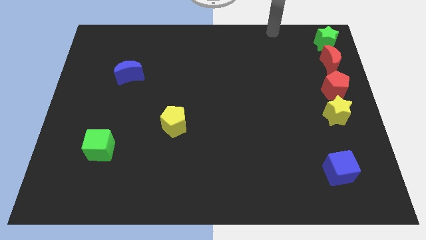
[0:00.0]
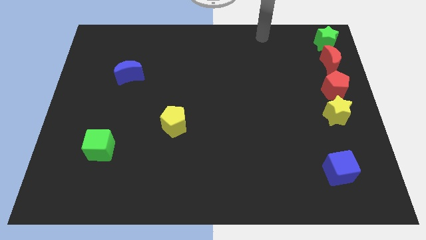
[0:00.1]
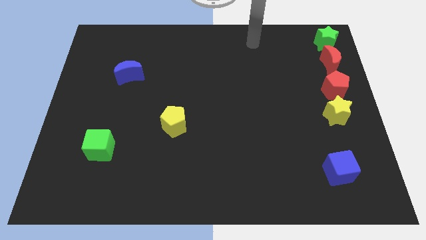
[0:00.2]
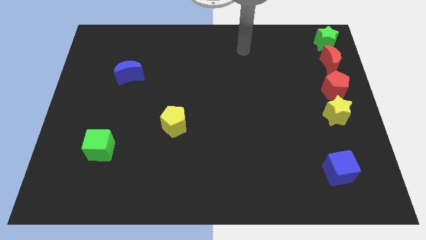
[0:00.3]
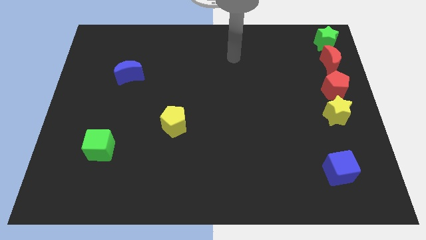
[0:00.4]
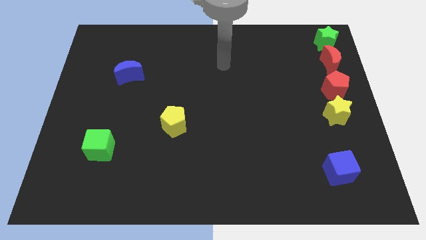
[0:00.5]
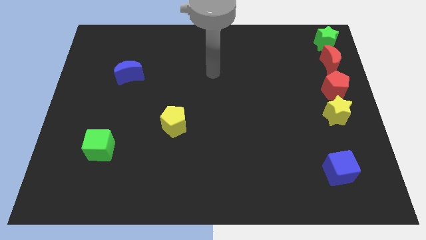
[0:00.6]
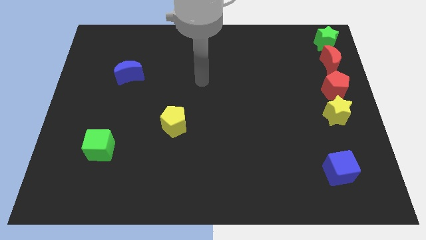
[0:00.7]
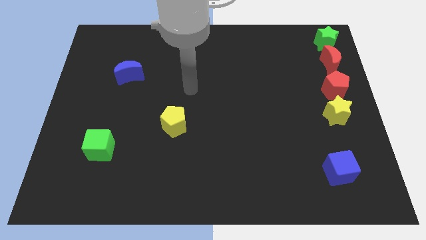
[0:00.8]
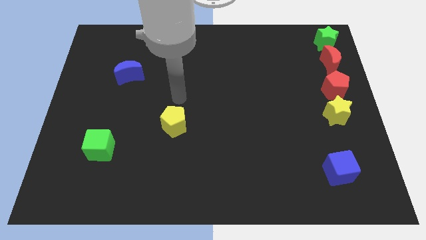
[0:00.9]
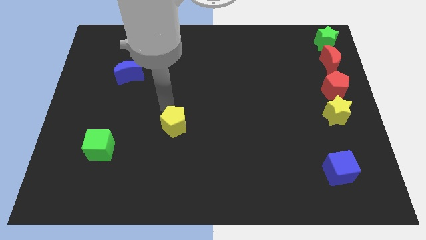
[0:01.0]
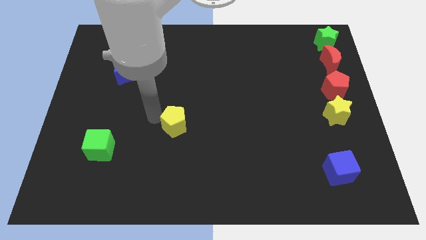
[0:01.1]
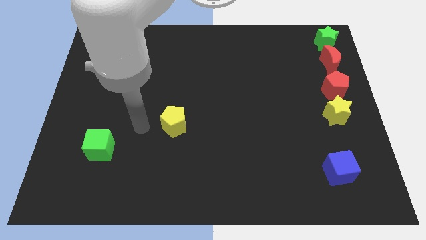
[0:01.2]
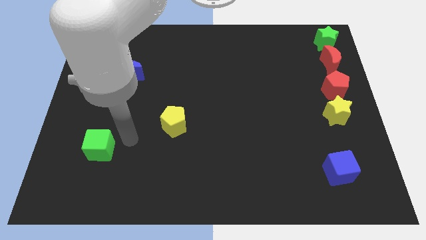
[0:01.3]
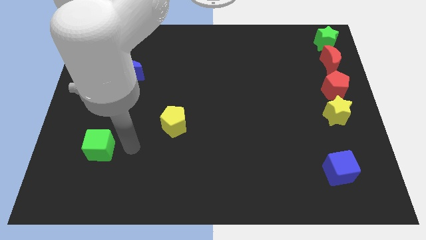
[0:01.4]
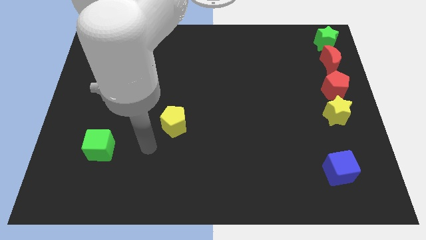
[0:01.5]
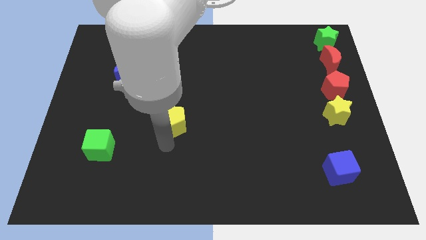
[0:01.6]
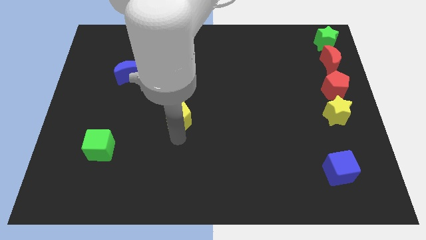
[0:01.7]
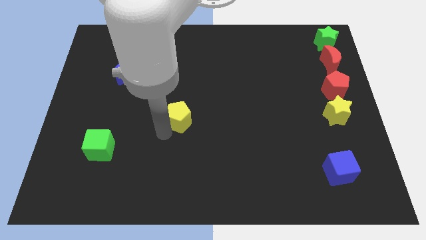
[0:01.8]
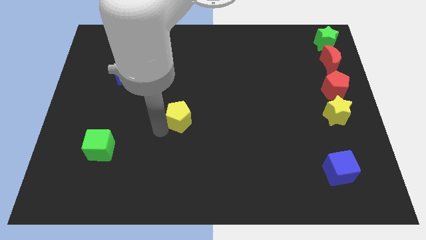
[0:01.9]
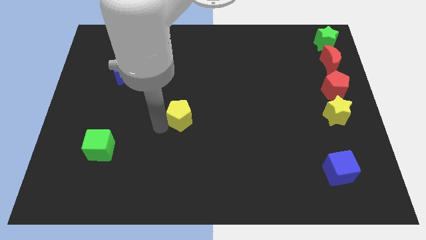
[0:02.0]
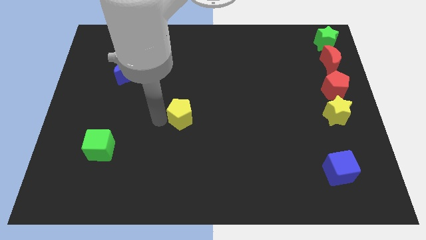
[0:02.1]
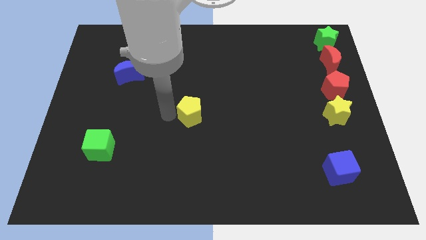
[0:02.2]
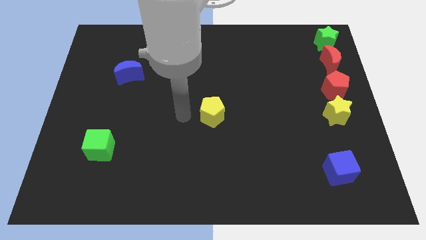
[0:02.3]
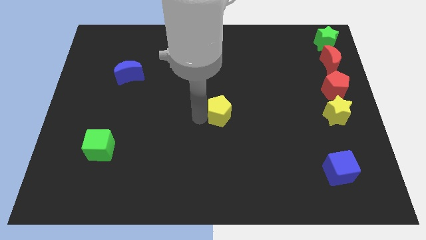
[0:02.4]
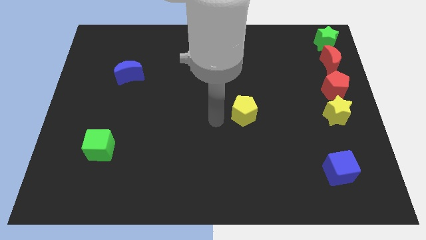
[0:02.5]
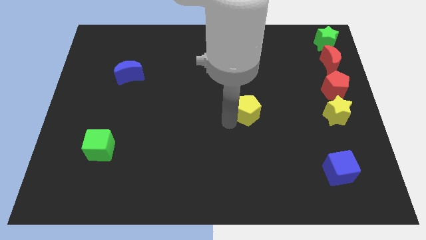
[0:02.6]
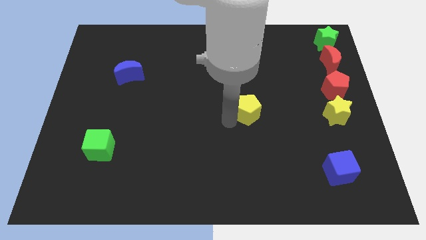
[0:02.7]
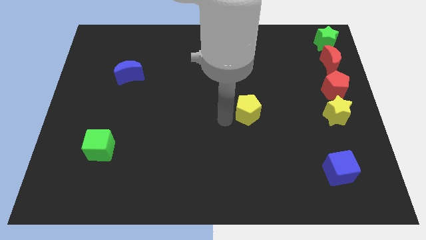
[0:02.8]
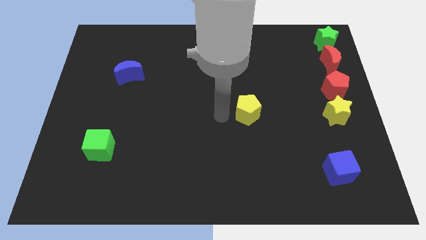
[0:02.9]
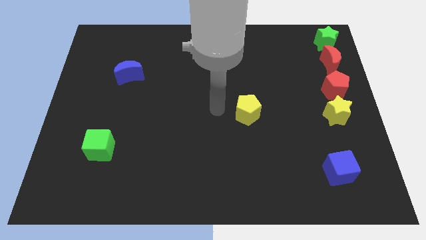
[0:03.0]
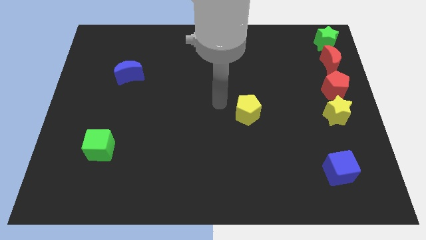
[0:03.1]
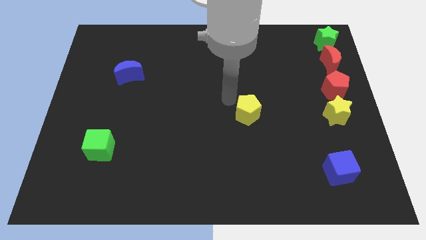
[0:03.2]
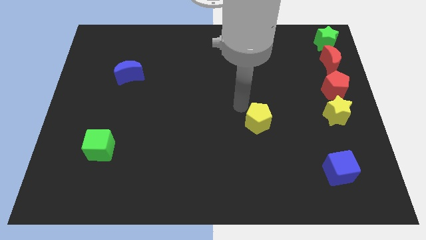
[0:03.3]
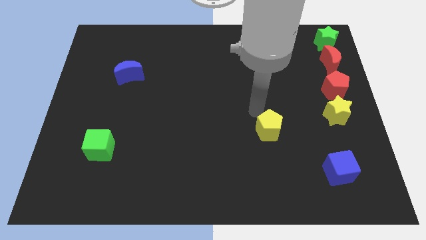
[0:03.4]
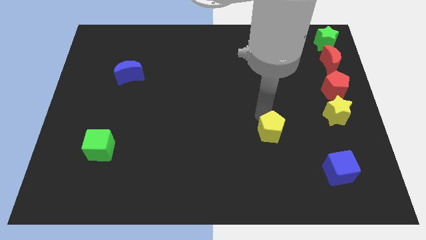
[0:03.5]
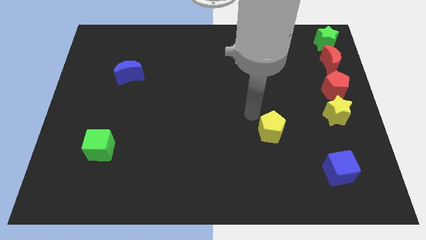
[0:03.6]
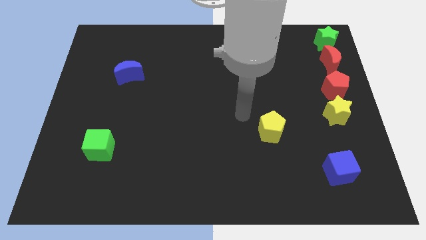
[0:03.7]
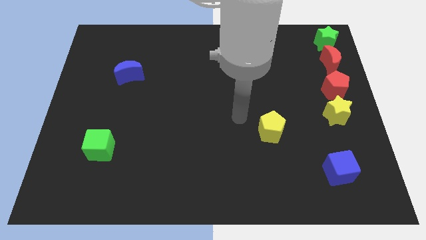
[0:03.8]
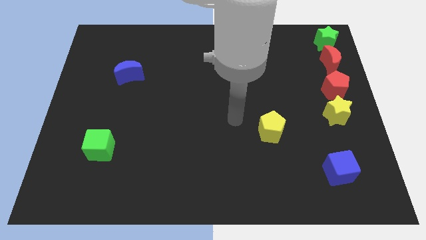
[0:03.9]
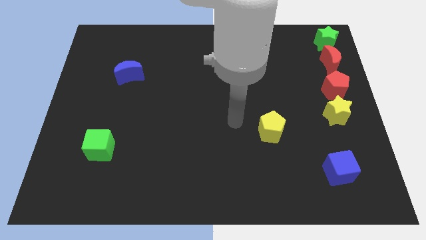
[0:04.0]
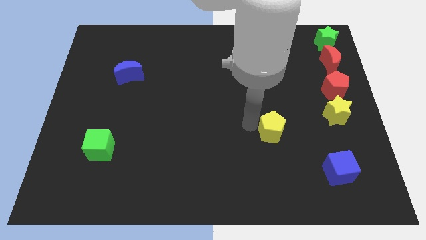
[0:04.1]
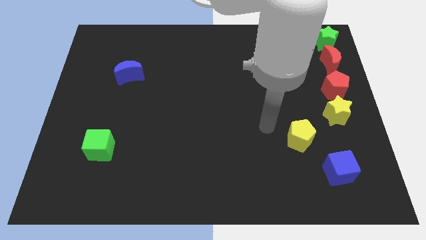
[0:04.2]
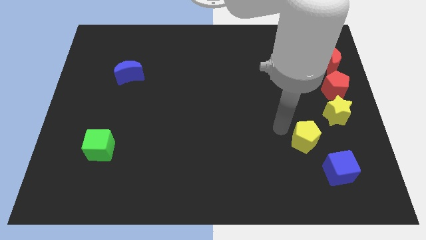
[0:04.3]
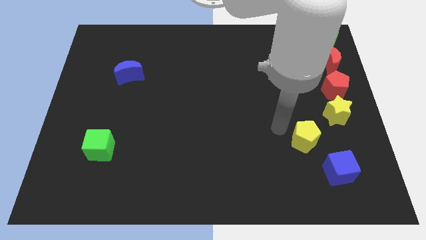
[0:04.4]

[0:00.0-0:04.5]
move the yellow pentagon towards the top side of the blue cube

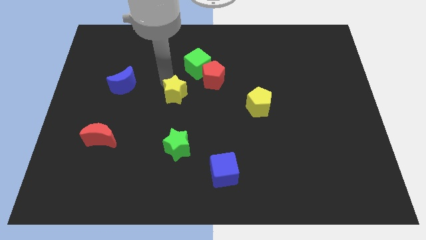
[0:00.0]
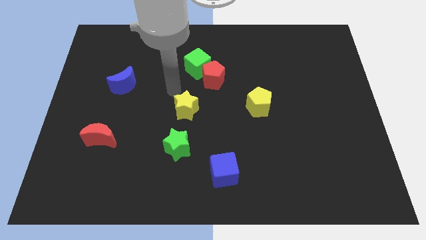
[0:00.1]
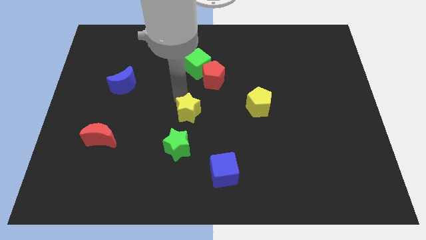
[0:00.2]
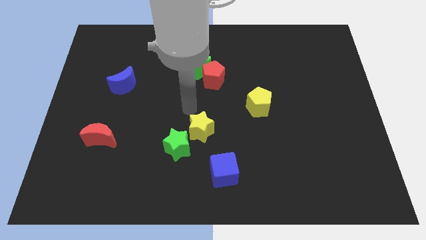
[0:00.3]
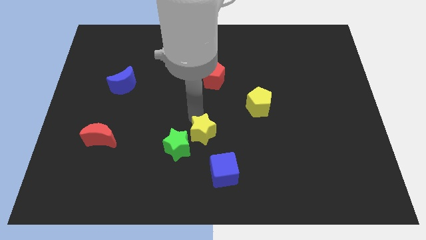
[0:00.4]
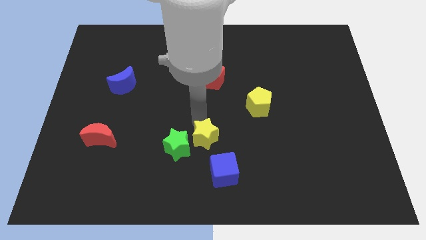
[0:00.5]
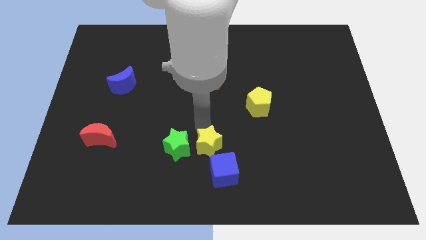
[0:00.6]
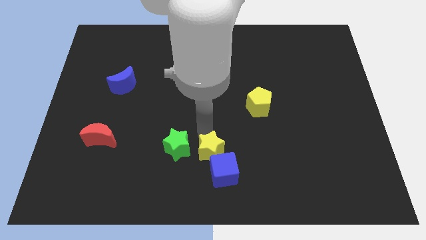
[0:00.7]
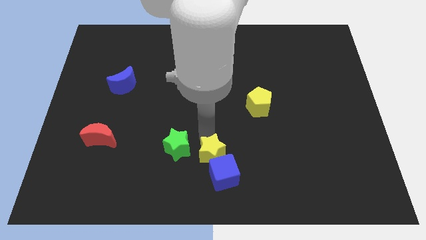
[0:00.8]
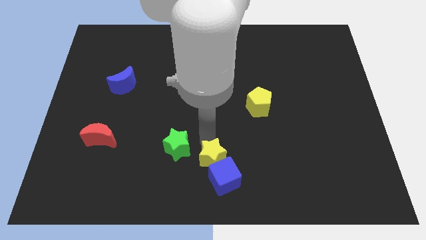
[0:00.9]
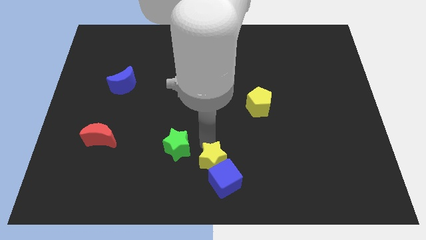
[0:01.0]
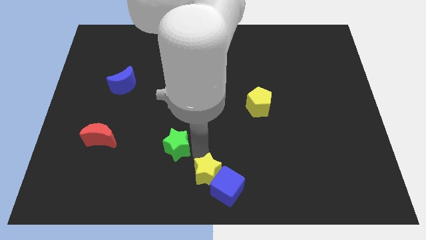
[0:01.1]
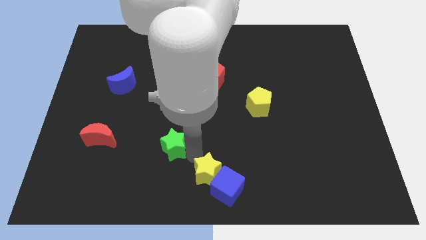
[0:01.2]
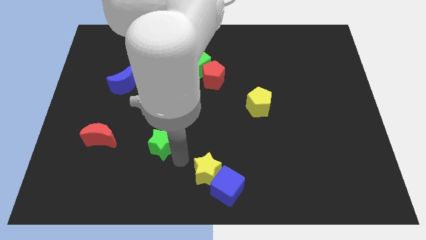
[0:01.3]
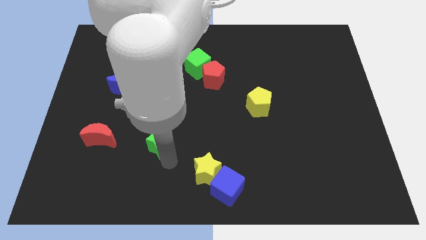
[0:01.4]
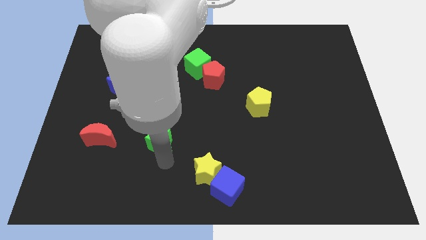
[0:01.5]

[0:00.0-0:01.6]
push the yellow star into the blue cube

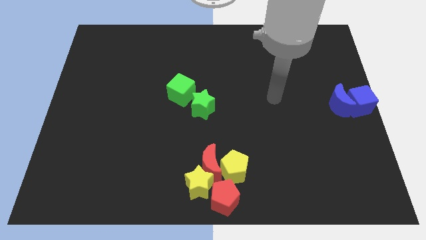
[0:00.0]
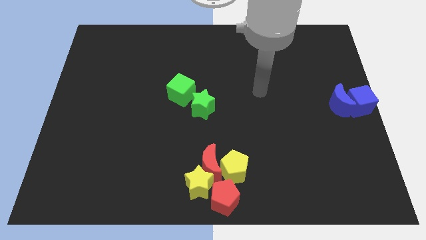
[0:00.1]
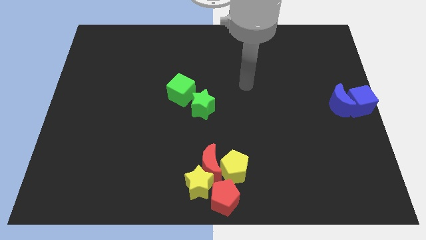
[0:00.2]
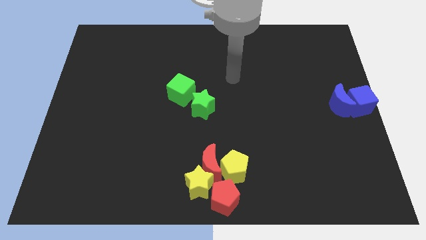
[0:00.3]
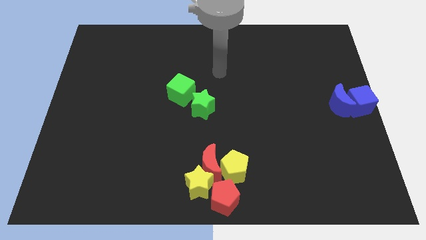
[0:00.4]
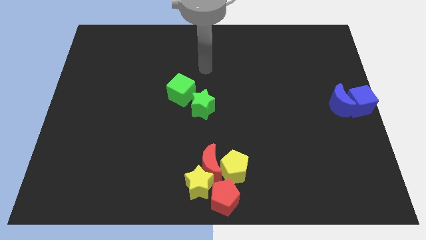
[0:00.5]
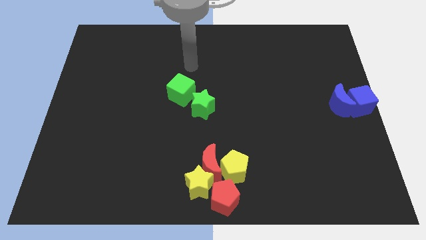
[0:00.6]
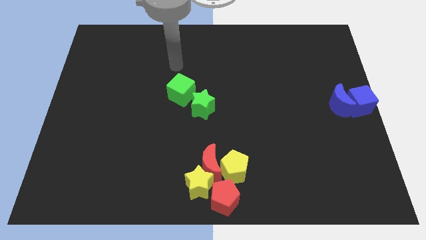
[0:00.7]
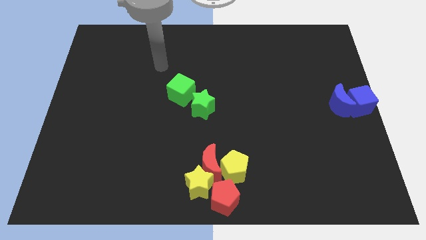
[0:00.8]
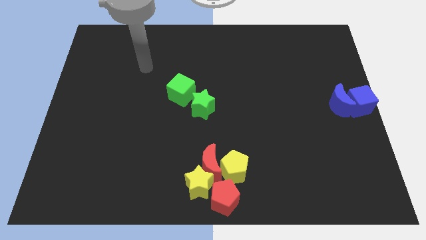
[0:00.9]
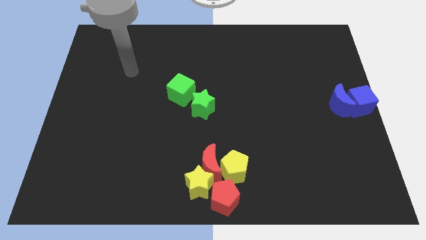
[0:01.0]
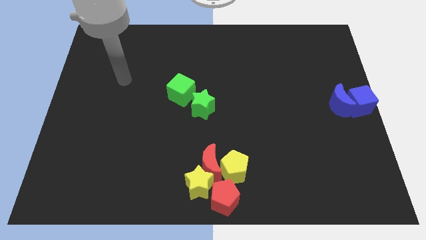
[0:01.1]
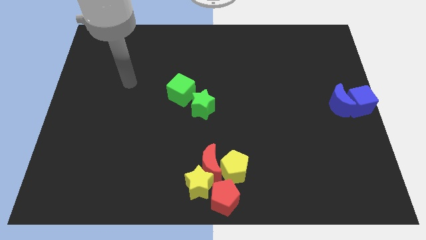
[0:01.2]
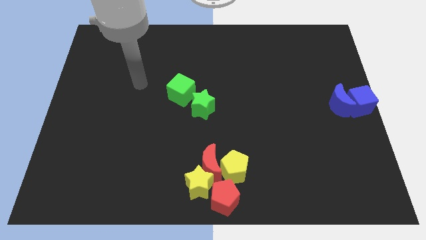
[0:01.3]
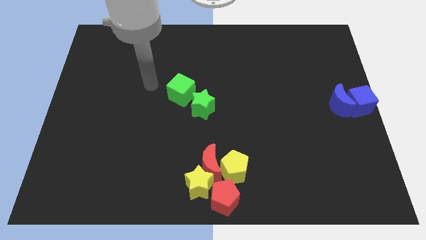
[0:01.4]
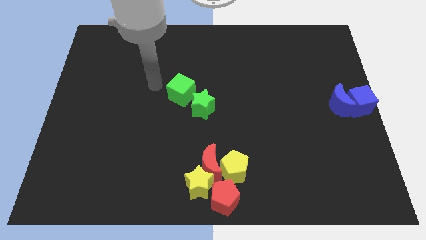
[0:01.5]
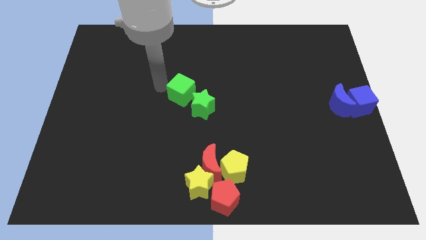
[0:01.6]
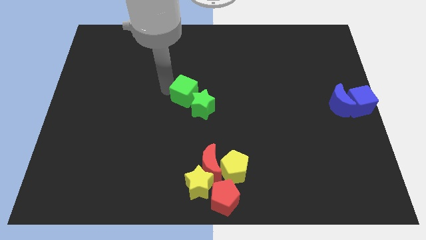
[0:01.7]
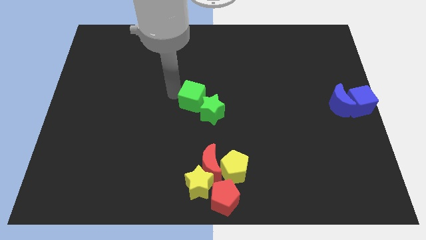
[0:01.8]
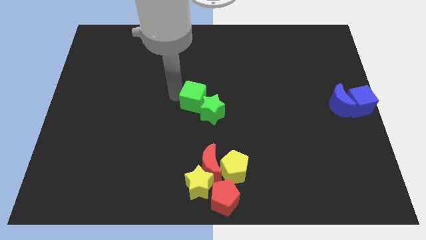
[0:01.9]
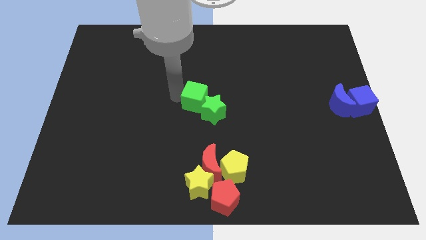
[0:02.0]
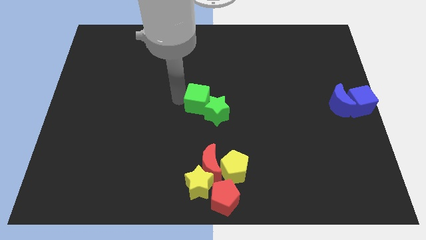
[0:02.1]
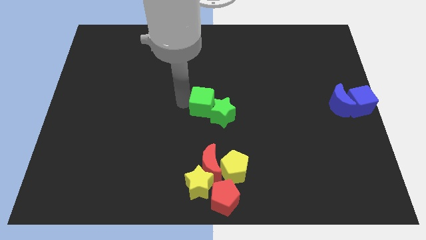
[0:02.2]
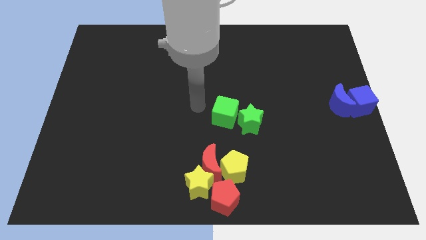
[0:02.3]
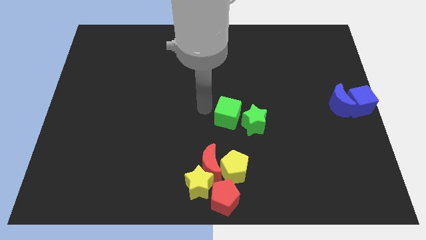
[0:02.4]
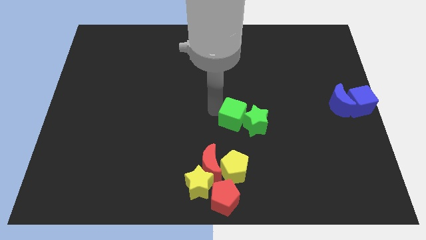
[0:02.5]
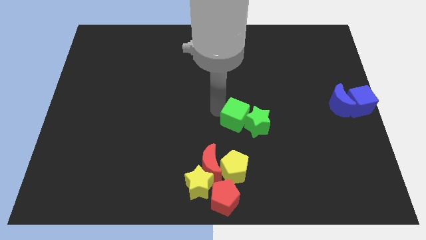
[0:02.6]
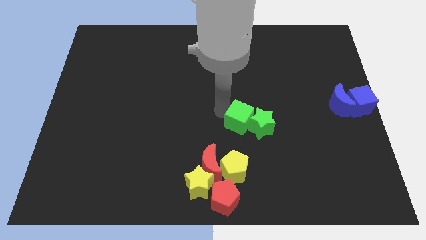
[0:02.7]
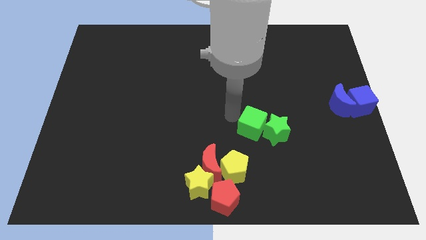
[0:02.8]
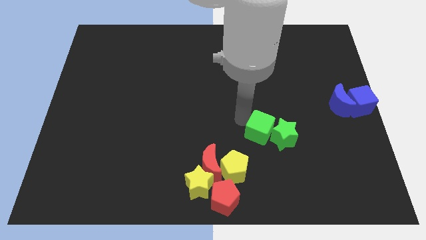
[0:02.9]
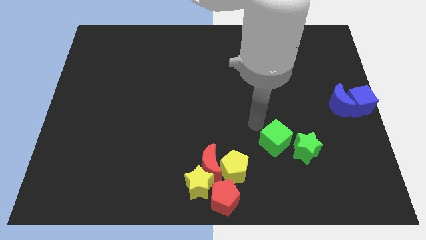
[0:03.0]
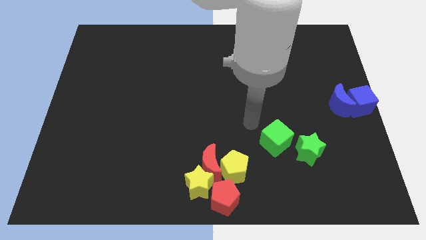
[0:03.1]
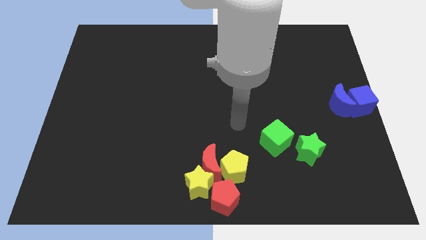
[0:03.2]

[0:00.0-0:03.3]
push both the green blocks diagonally on the bottom left side of the blue blocks
